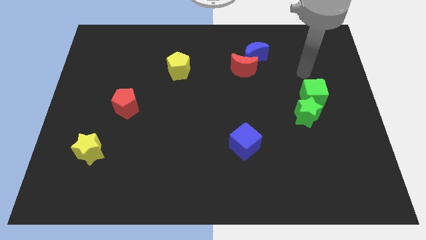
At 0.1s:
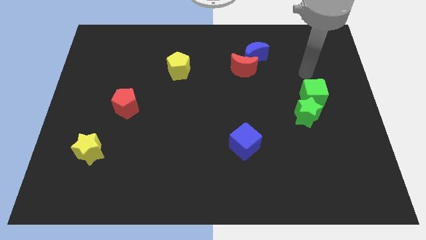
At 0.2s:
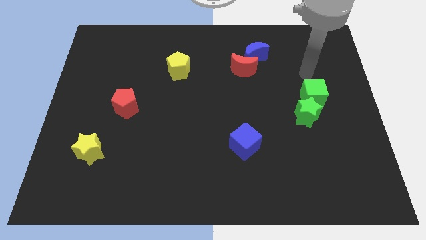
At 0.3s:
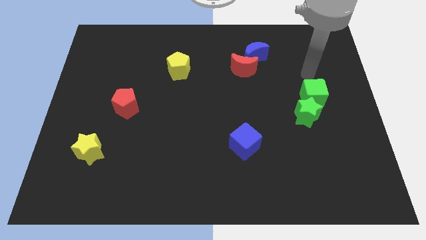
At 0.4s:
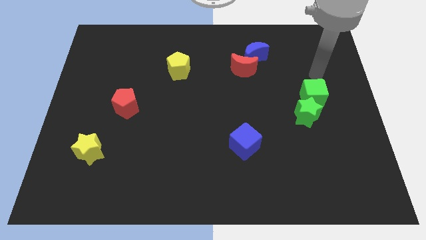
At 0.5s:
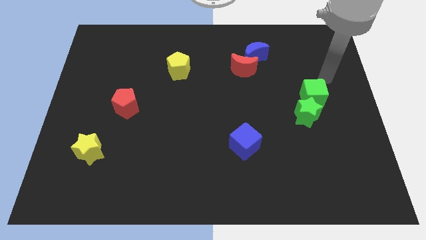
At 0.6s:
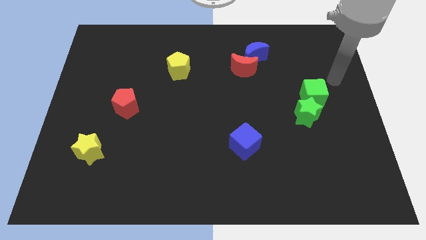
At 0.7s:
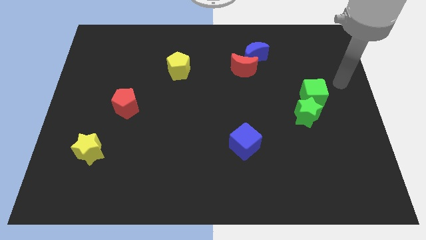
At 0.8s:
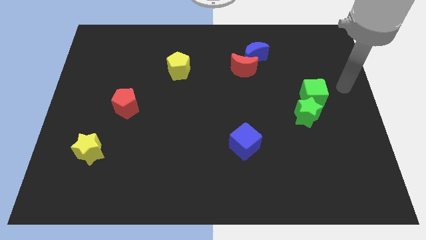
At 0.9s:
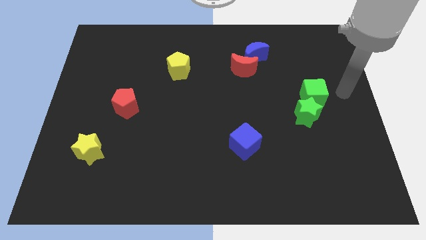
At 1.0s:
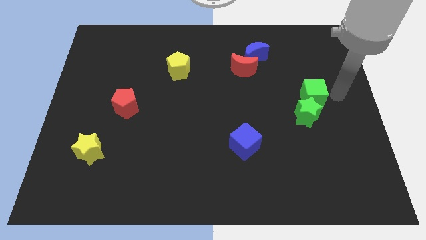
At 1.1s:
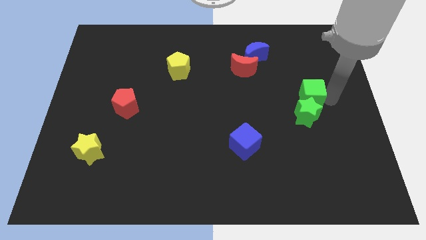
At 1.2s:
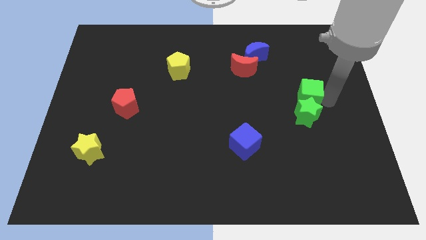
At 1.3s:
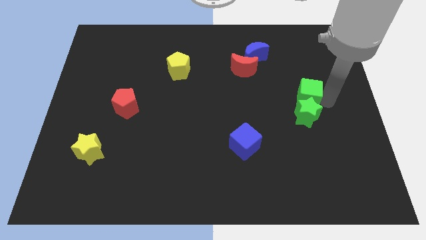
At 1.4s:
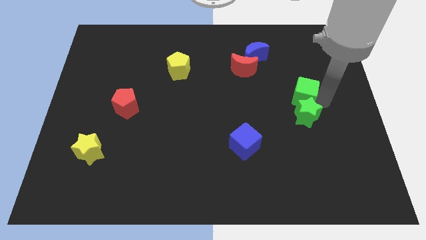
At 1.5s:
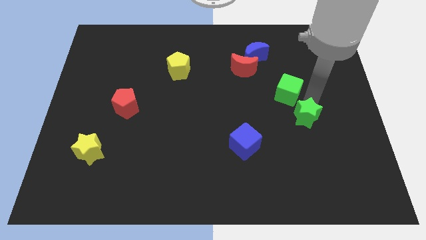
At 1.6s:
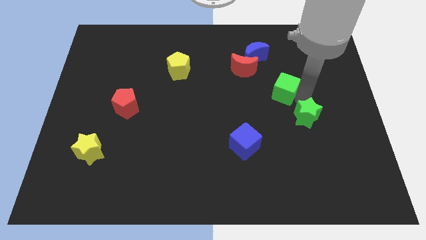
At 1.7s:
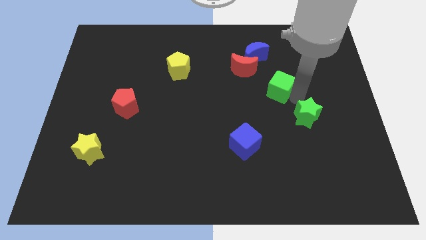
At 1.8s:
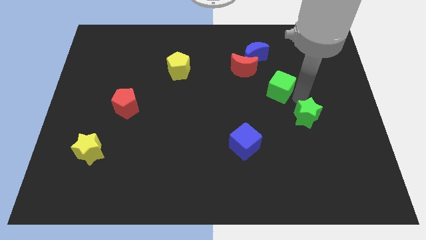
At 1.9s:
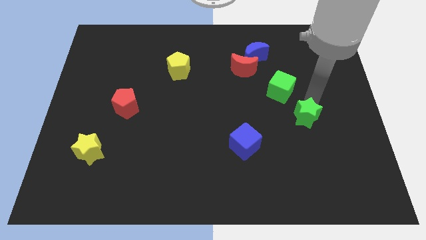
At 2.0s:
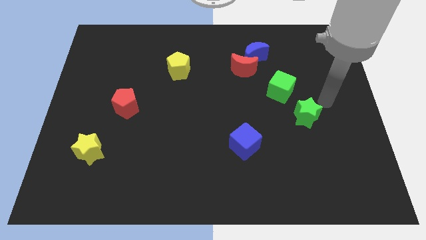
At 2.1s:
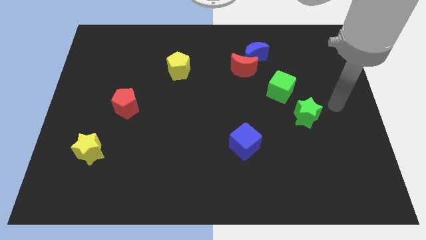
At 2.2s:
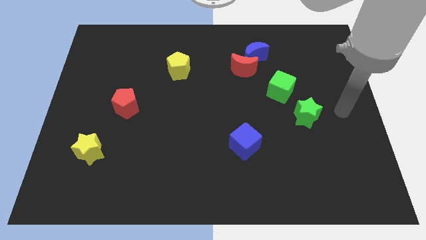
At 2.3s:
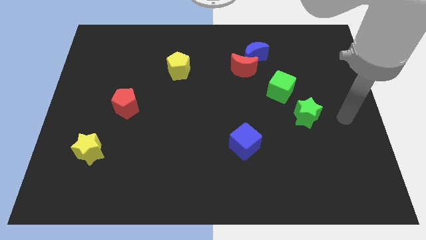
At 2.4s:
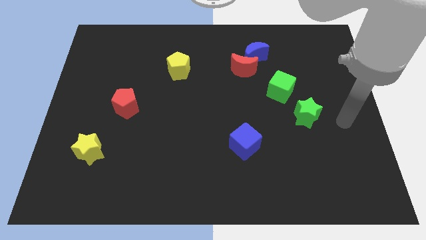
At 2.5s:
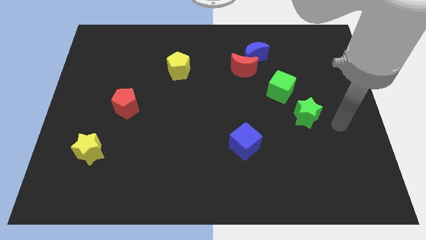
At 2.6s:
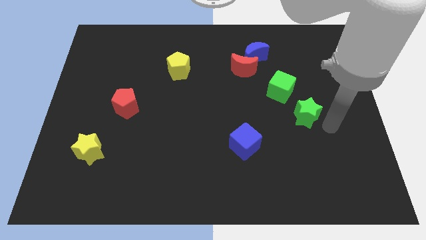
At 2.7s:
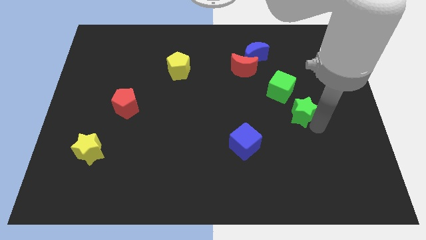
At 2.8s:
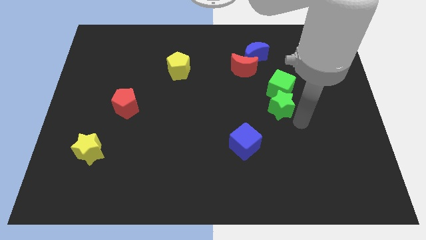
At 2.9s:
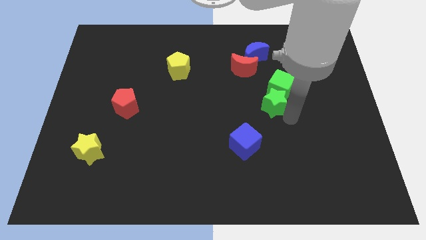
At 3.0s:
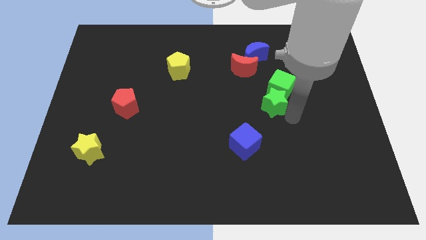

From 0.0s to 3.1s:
push the green blocks towards the center of the board

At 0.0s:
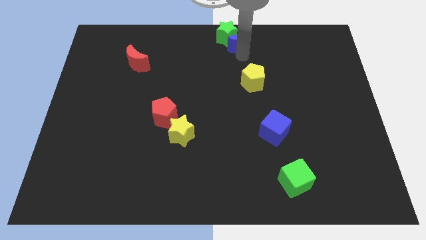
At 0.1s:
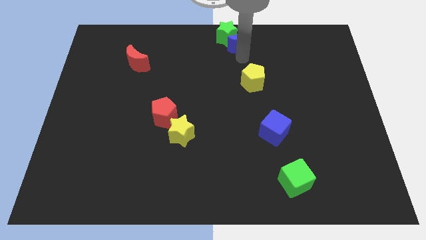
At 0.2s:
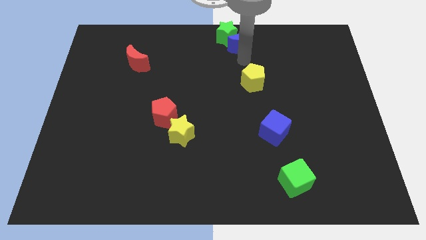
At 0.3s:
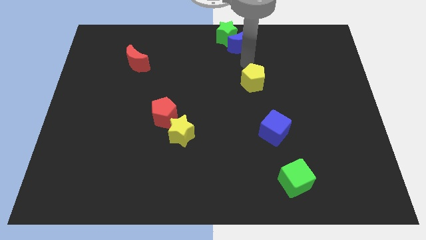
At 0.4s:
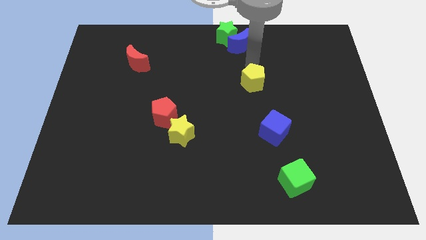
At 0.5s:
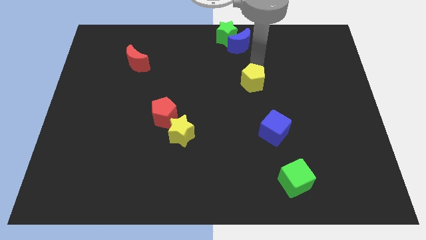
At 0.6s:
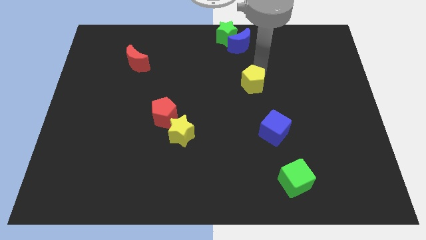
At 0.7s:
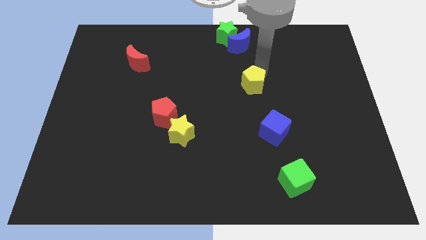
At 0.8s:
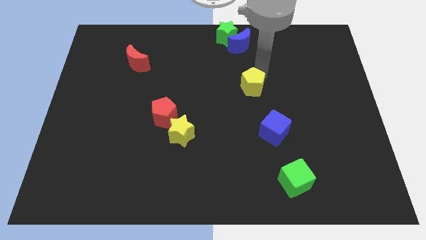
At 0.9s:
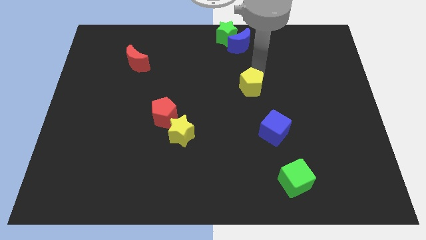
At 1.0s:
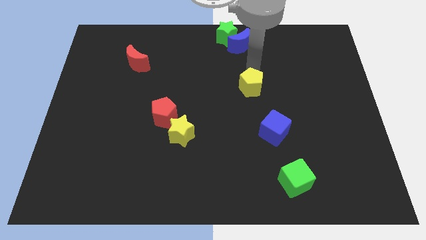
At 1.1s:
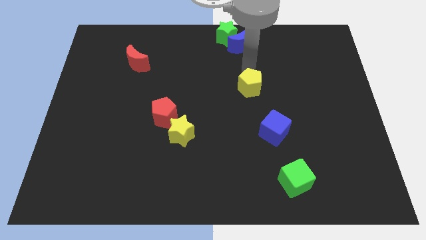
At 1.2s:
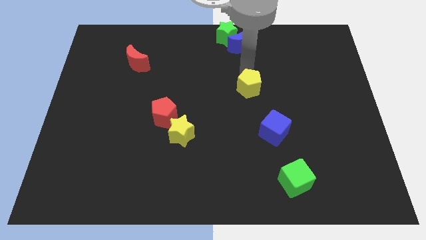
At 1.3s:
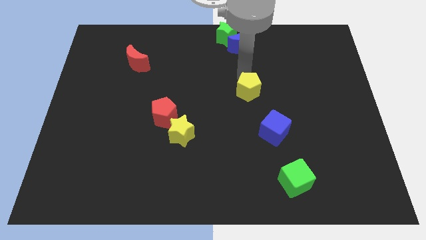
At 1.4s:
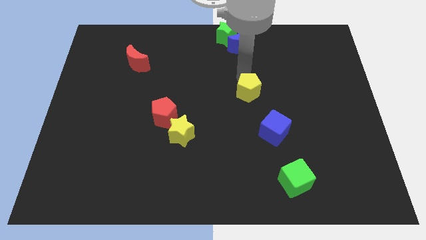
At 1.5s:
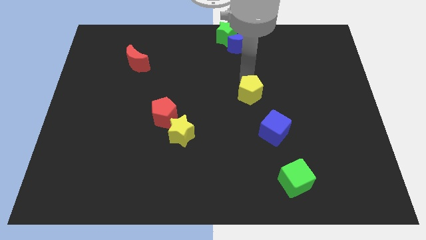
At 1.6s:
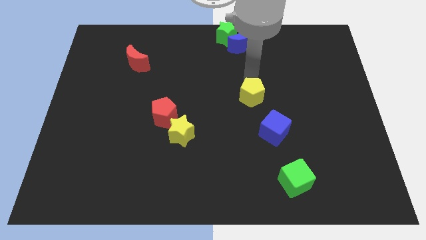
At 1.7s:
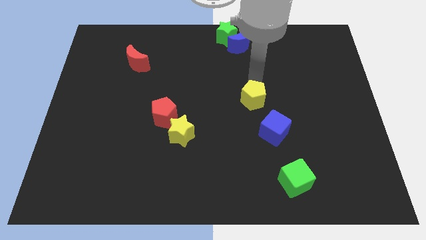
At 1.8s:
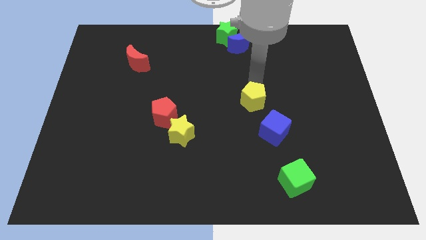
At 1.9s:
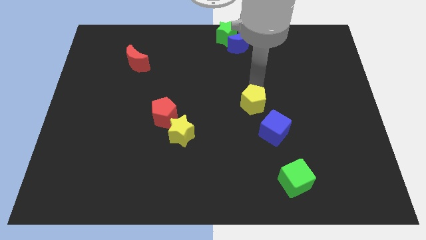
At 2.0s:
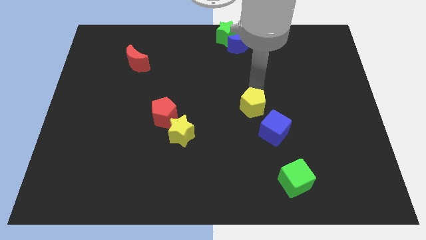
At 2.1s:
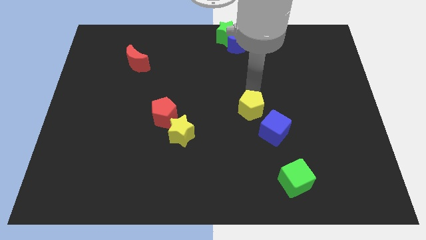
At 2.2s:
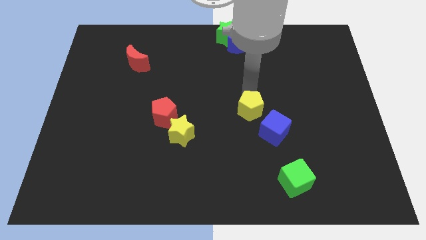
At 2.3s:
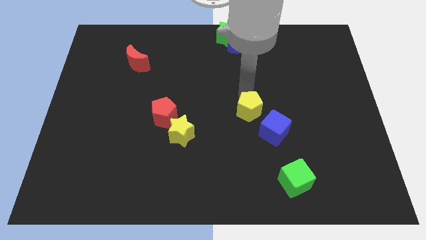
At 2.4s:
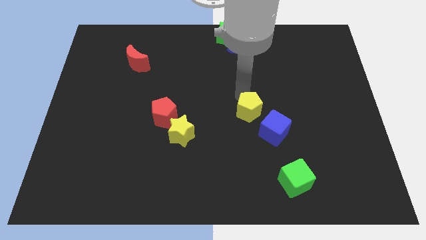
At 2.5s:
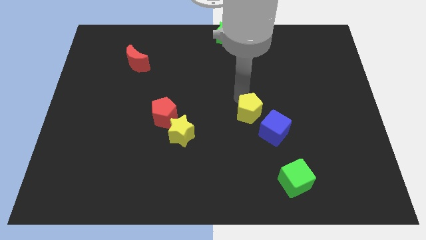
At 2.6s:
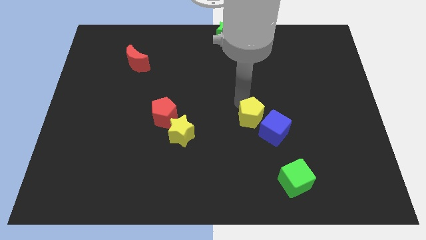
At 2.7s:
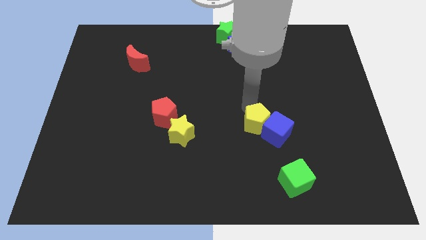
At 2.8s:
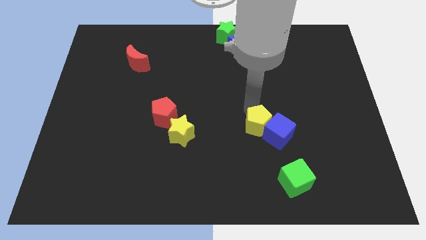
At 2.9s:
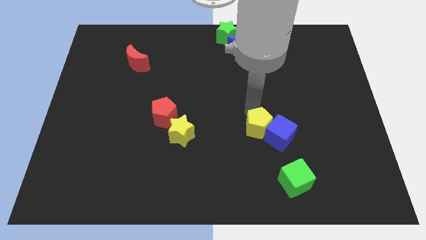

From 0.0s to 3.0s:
put the yellow pentagon at the top left side of blue cube

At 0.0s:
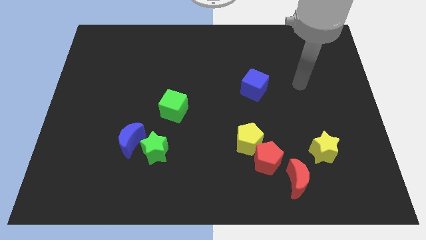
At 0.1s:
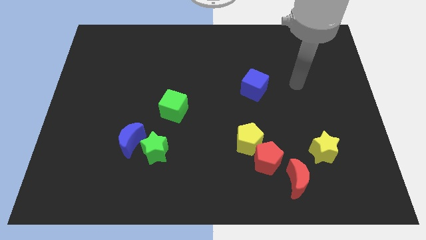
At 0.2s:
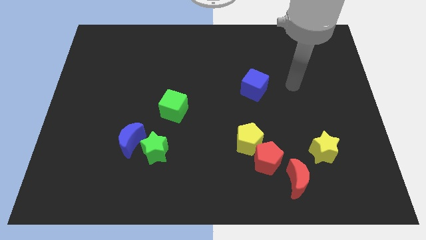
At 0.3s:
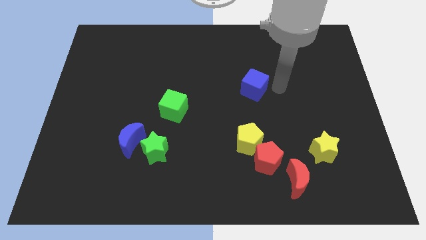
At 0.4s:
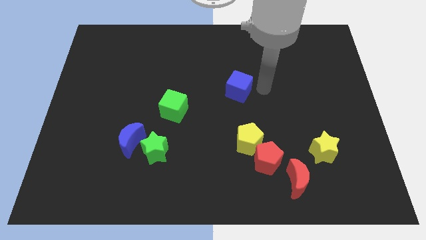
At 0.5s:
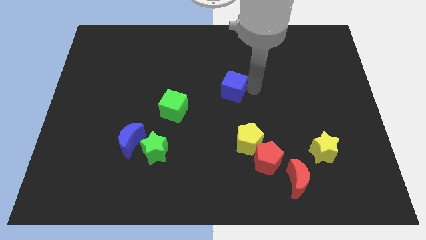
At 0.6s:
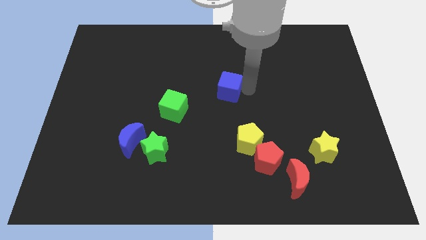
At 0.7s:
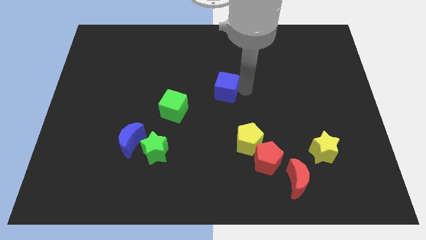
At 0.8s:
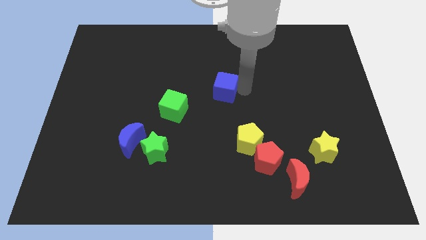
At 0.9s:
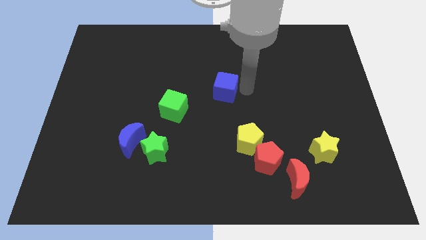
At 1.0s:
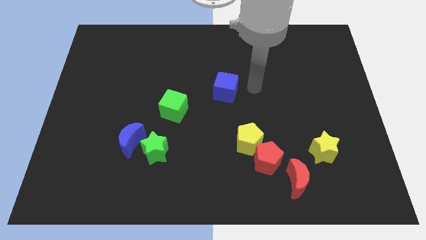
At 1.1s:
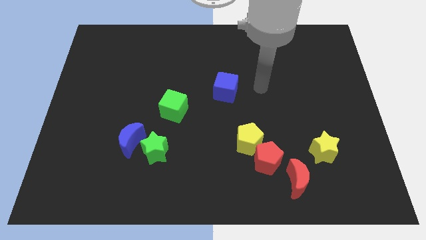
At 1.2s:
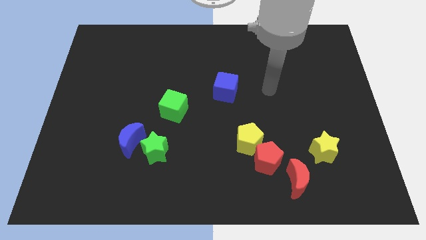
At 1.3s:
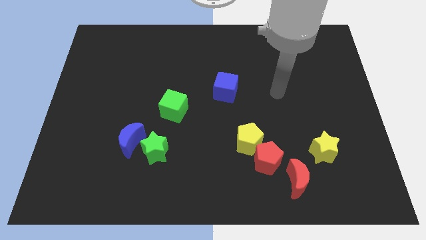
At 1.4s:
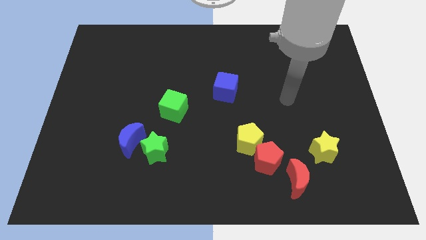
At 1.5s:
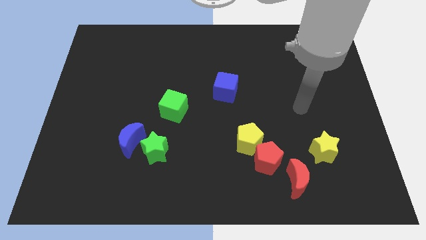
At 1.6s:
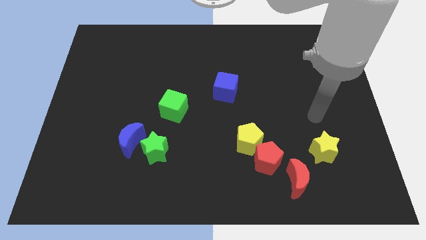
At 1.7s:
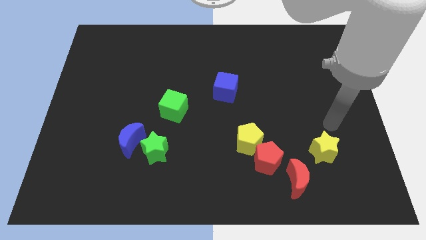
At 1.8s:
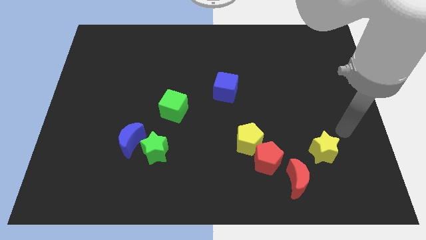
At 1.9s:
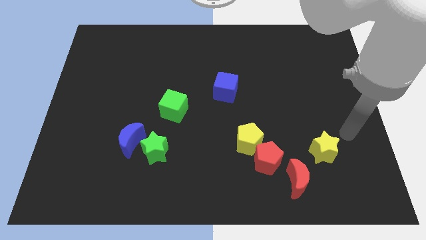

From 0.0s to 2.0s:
push the blue cube towards the green cube

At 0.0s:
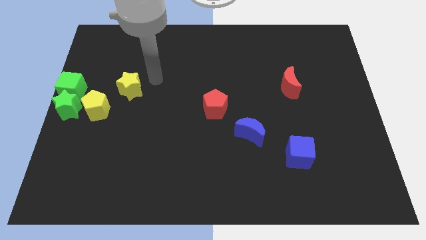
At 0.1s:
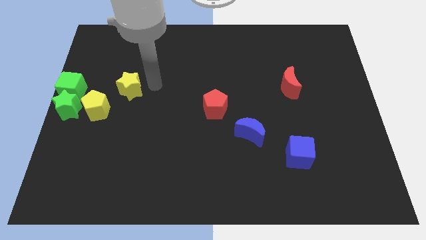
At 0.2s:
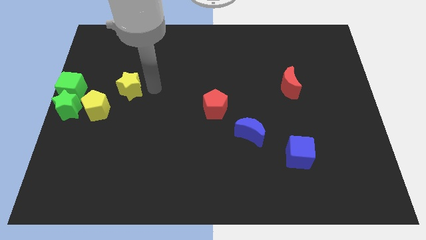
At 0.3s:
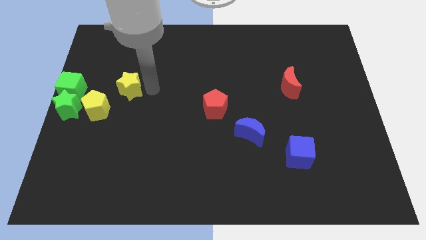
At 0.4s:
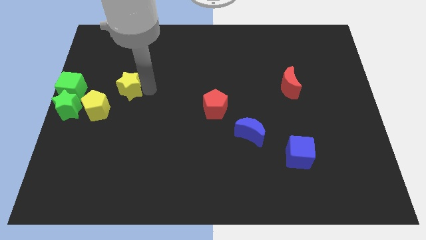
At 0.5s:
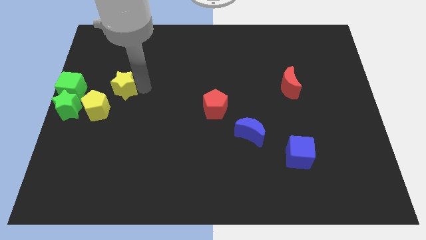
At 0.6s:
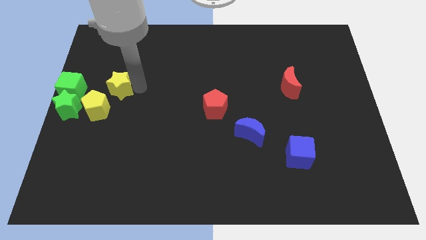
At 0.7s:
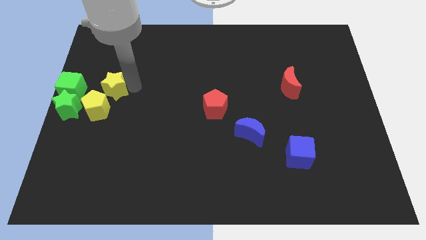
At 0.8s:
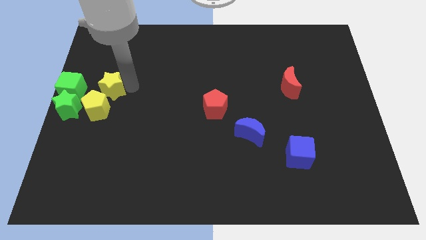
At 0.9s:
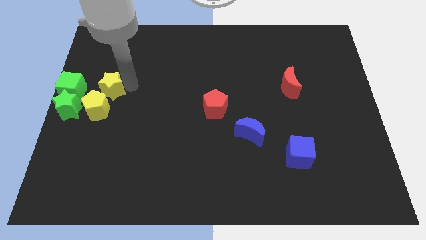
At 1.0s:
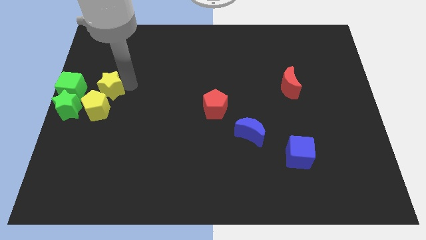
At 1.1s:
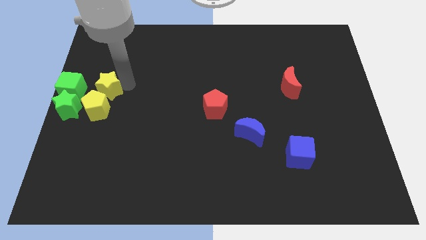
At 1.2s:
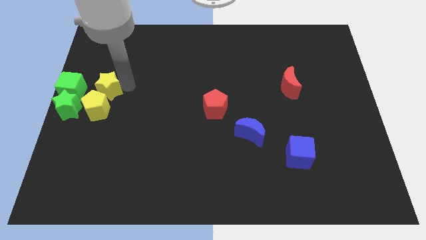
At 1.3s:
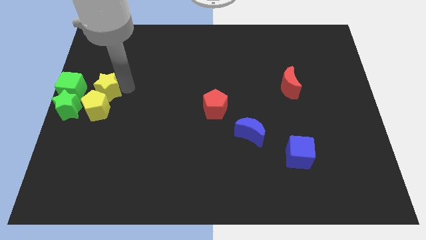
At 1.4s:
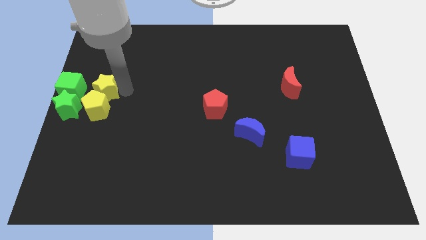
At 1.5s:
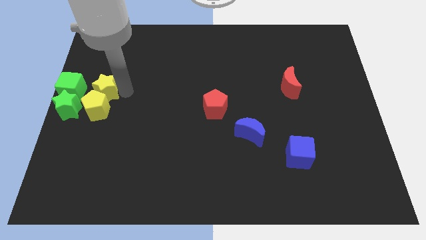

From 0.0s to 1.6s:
move yellow star above yellow pentagon
